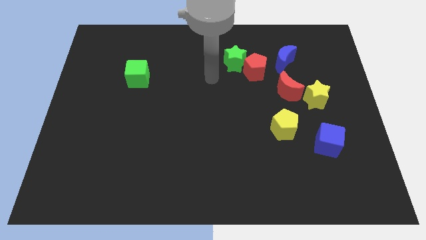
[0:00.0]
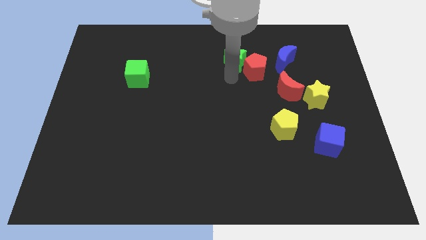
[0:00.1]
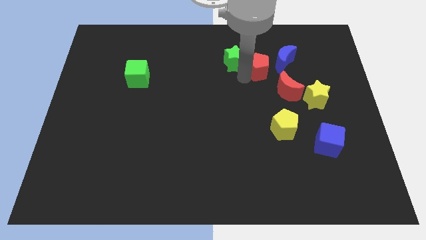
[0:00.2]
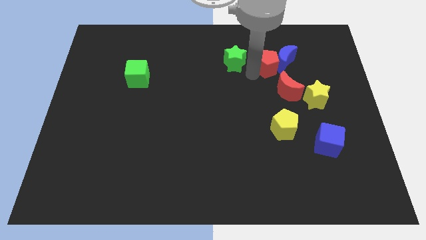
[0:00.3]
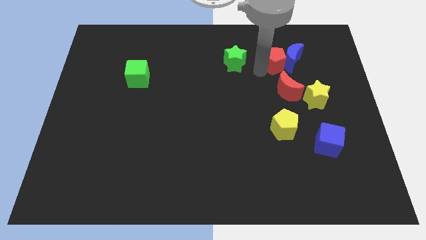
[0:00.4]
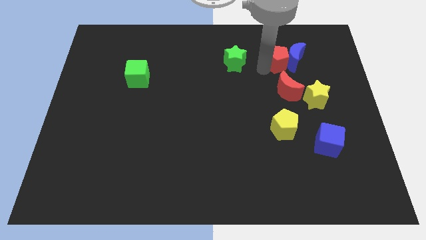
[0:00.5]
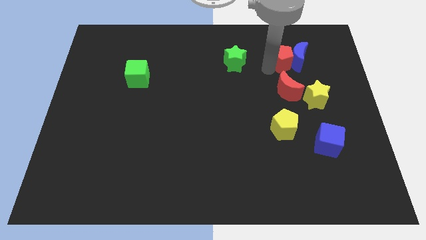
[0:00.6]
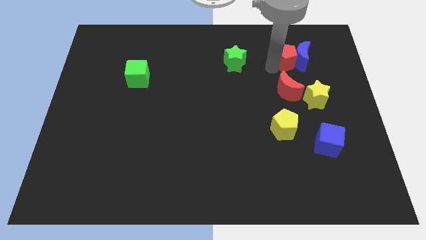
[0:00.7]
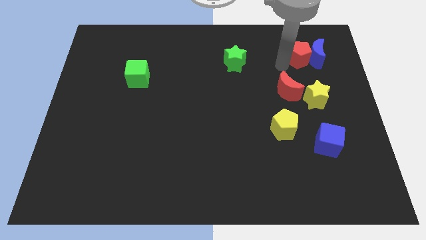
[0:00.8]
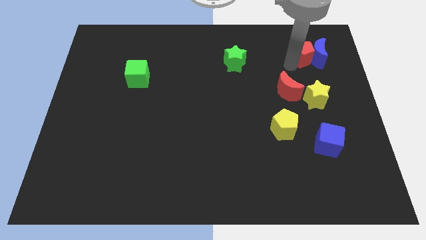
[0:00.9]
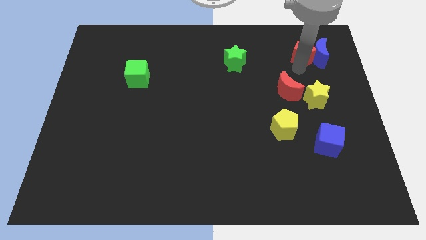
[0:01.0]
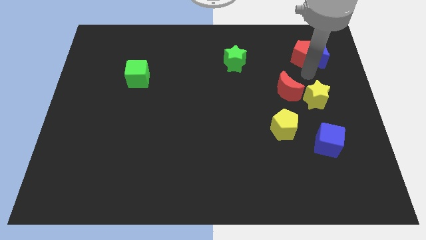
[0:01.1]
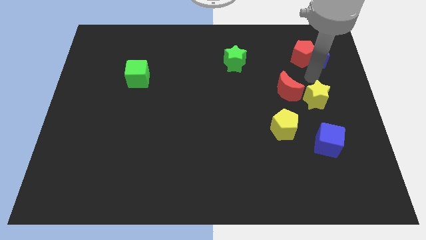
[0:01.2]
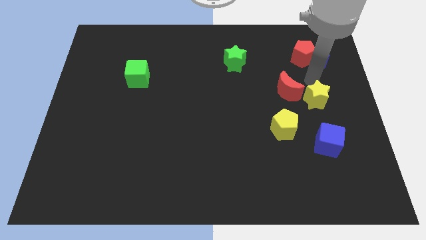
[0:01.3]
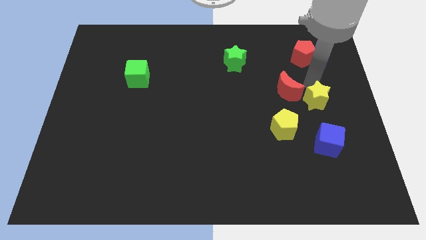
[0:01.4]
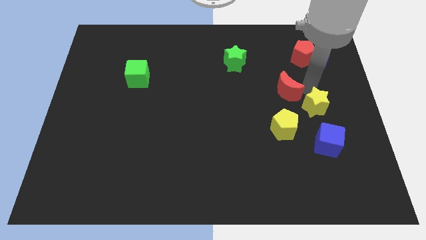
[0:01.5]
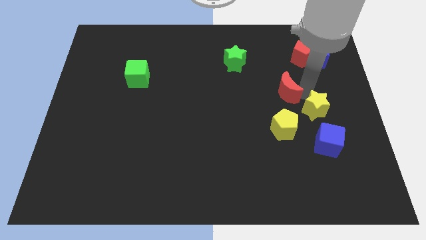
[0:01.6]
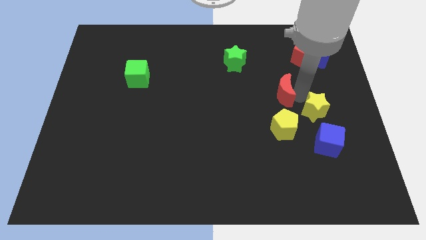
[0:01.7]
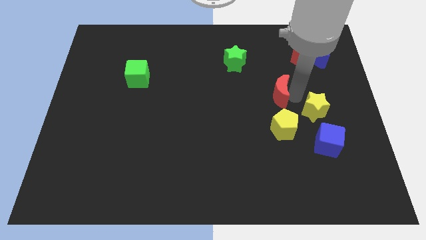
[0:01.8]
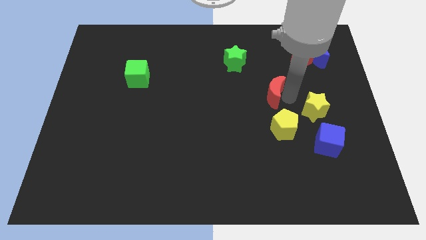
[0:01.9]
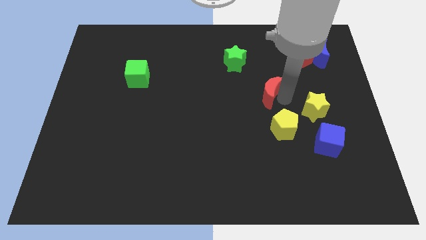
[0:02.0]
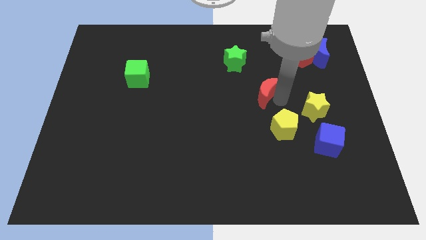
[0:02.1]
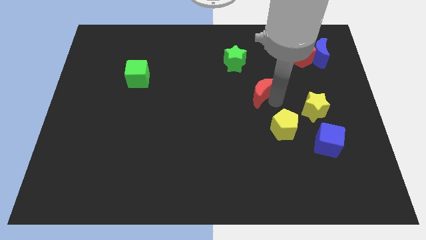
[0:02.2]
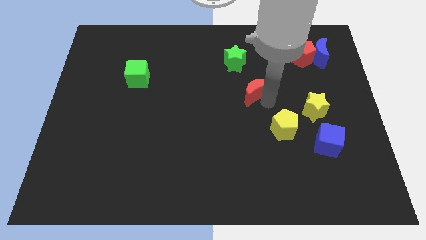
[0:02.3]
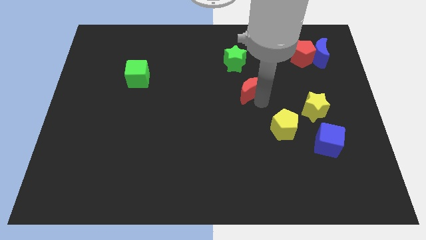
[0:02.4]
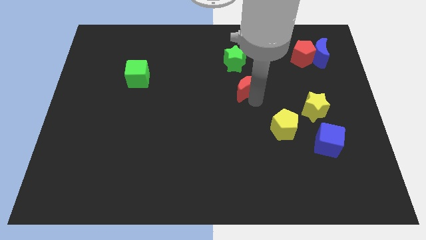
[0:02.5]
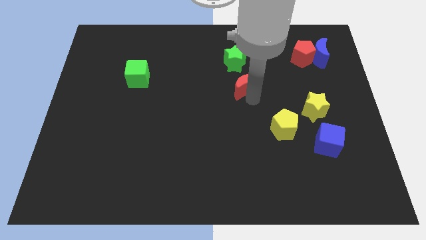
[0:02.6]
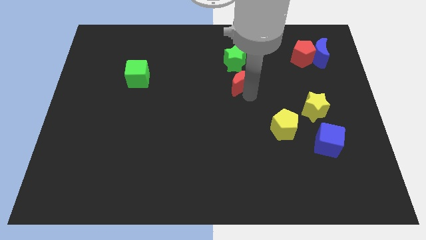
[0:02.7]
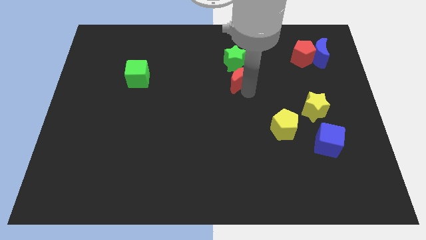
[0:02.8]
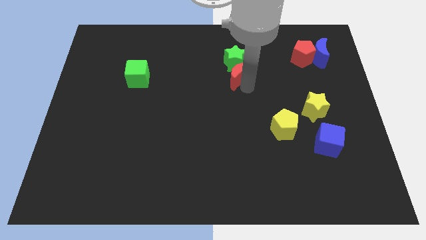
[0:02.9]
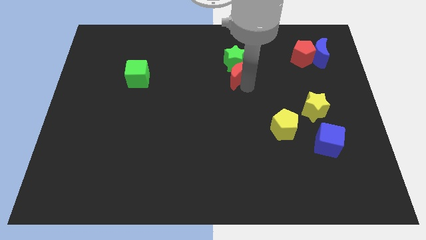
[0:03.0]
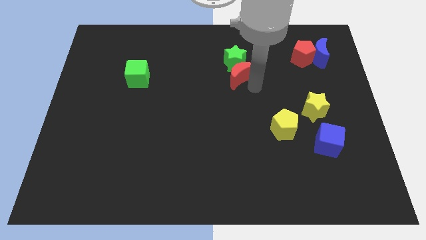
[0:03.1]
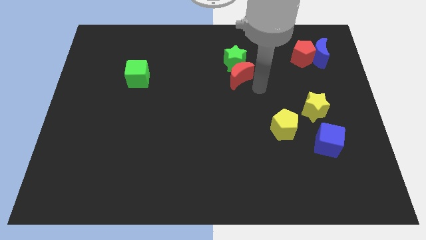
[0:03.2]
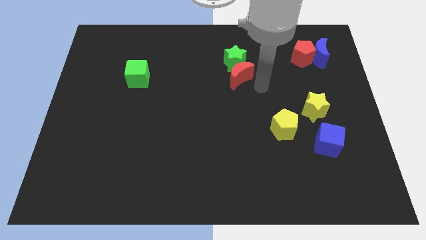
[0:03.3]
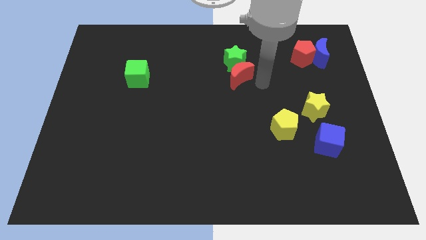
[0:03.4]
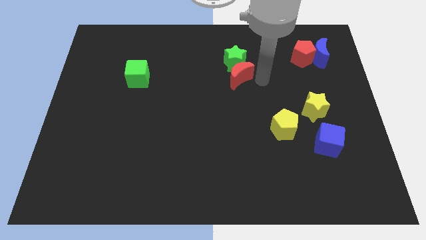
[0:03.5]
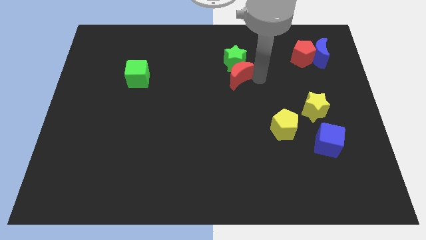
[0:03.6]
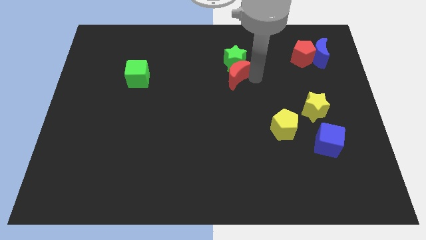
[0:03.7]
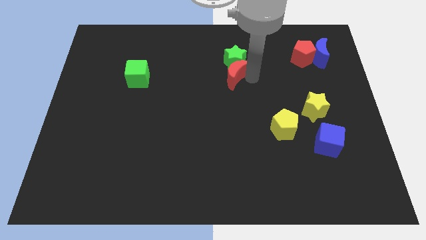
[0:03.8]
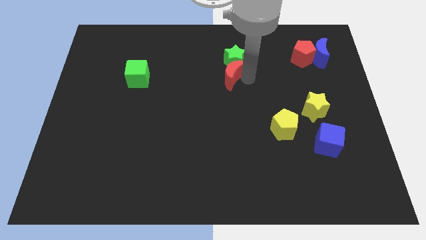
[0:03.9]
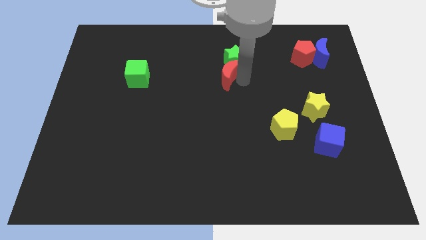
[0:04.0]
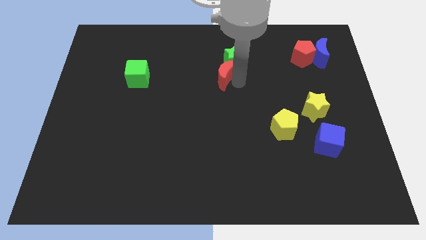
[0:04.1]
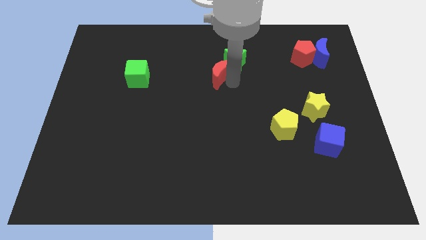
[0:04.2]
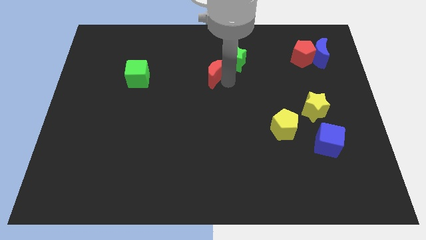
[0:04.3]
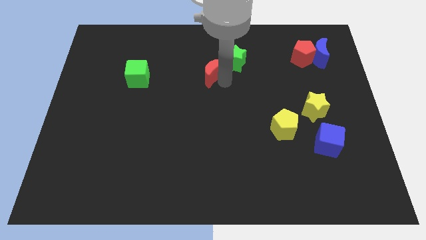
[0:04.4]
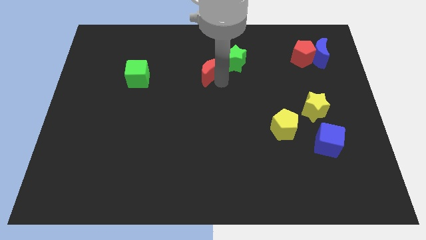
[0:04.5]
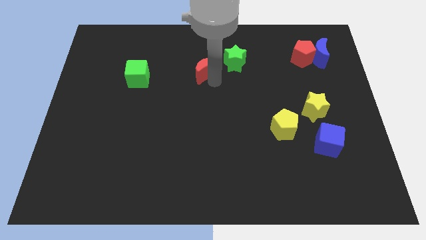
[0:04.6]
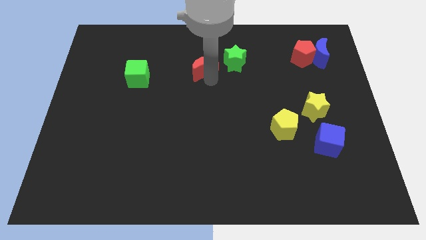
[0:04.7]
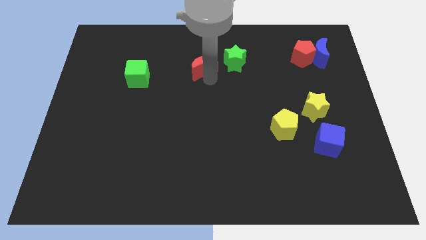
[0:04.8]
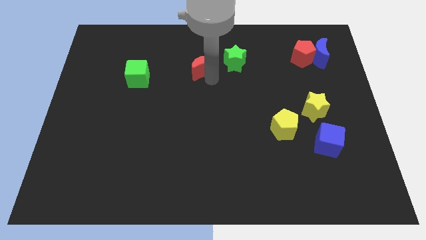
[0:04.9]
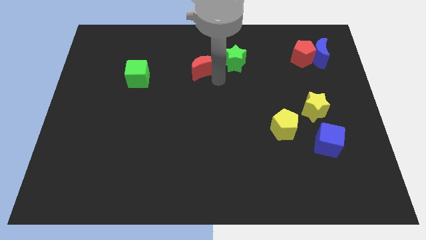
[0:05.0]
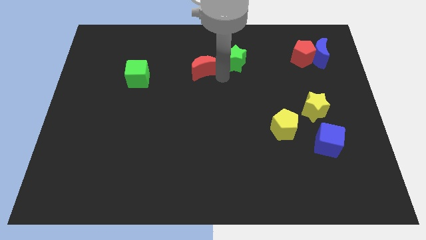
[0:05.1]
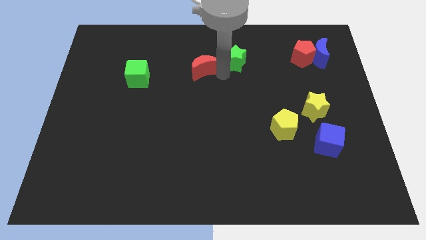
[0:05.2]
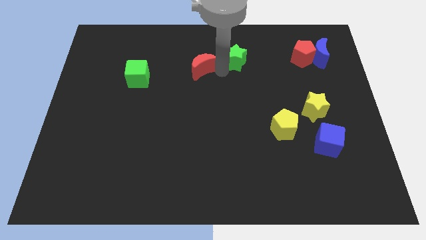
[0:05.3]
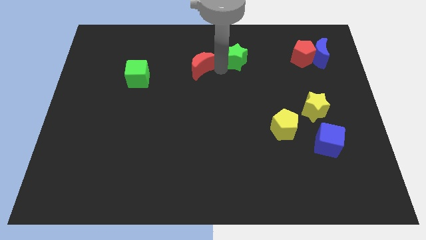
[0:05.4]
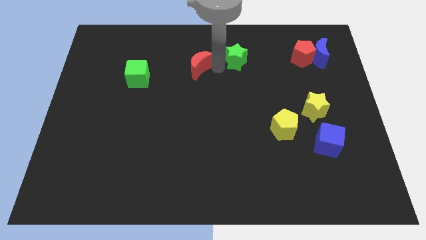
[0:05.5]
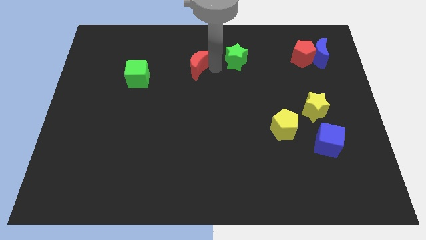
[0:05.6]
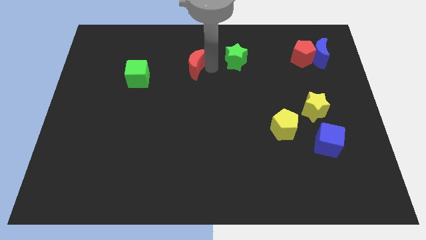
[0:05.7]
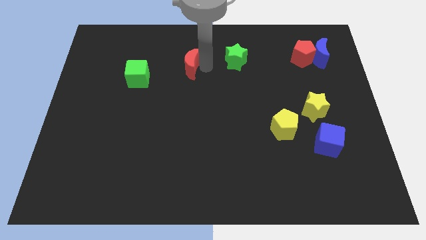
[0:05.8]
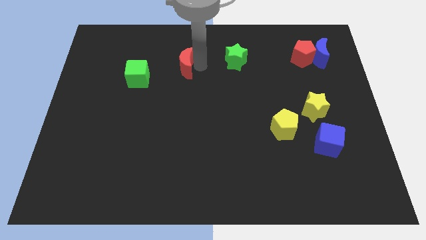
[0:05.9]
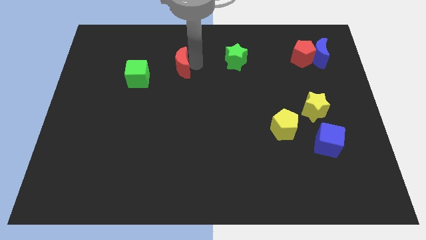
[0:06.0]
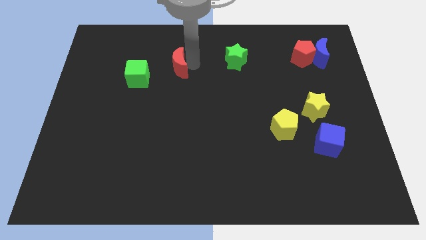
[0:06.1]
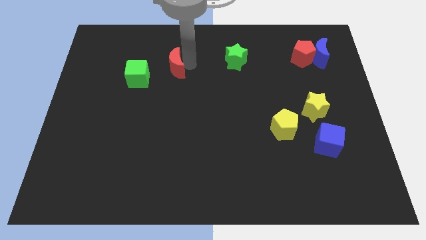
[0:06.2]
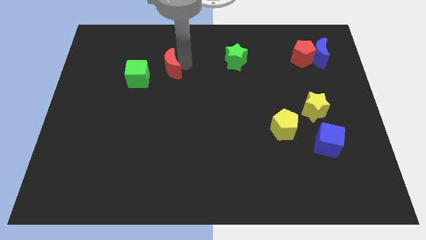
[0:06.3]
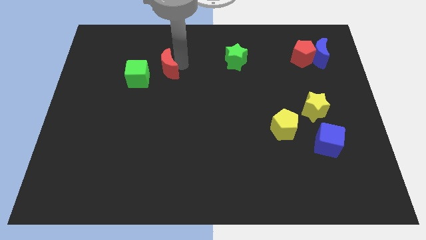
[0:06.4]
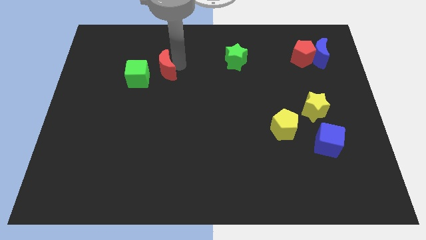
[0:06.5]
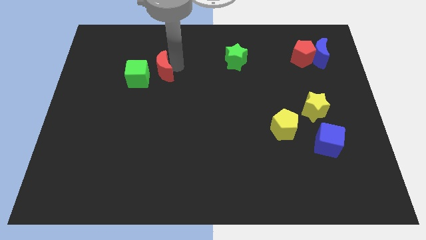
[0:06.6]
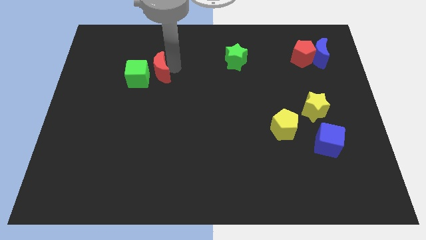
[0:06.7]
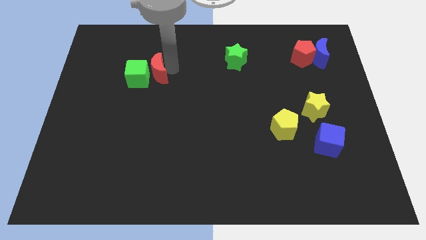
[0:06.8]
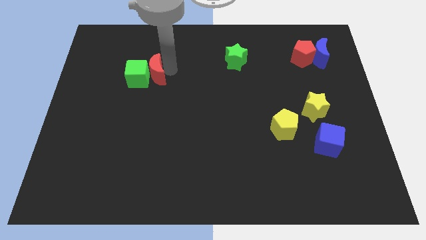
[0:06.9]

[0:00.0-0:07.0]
slide the red moon to the green cube

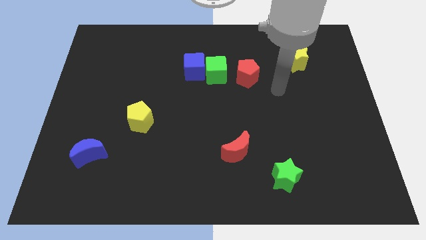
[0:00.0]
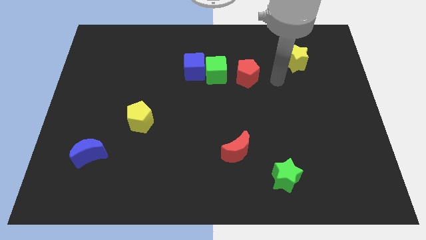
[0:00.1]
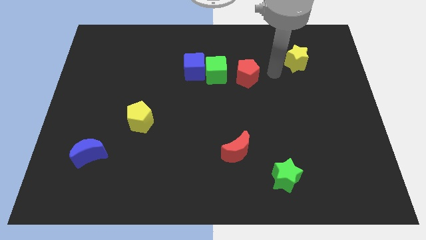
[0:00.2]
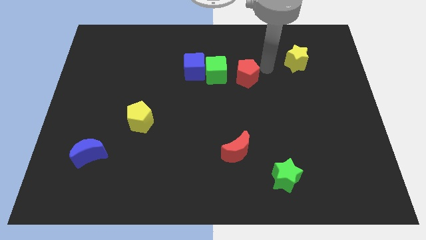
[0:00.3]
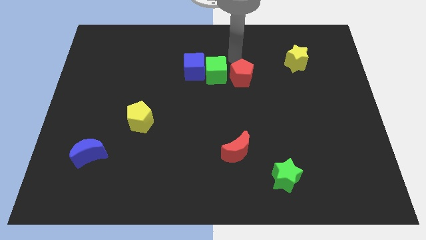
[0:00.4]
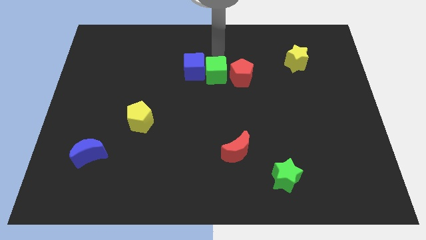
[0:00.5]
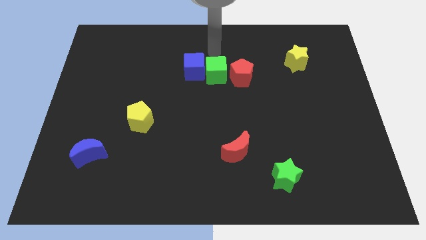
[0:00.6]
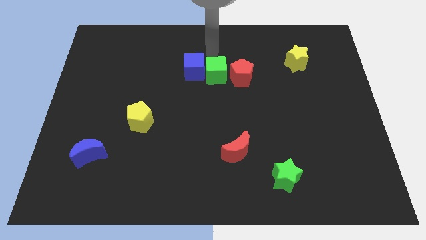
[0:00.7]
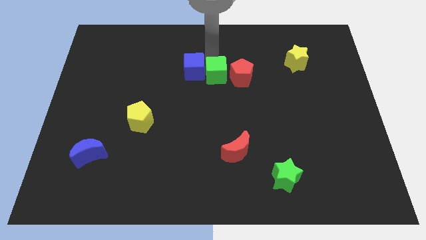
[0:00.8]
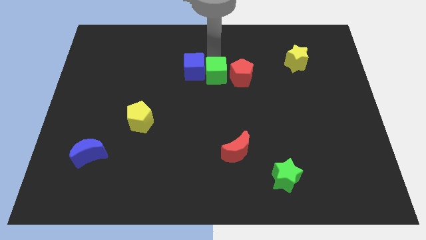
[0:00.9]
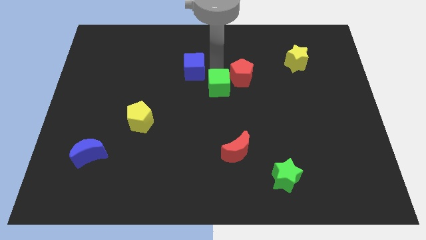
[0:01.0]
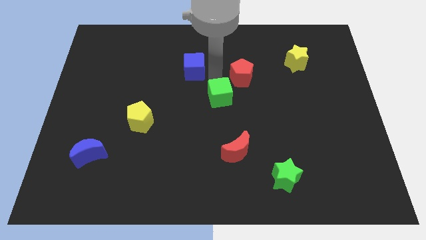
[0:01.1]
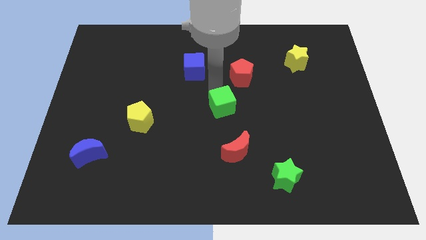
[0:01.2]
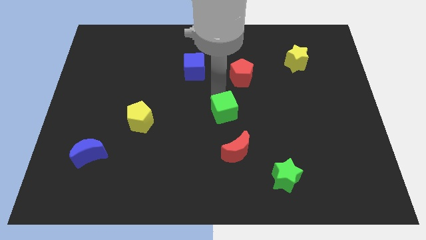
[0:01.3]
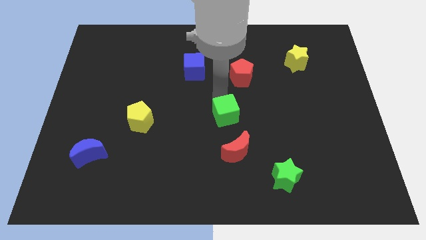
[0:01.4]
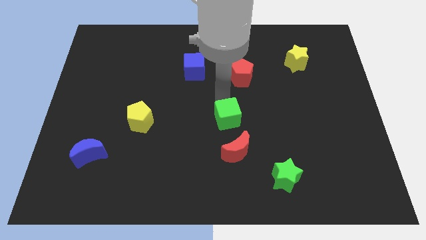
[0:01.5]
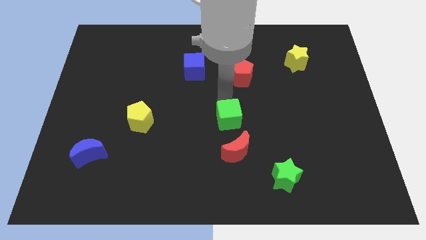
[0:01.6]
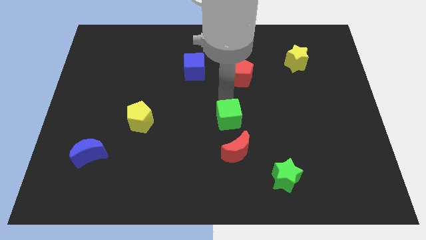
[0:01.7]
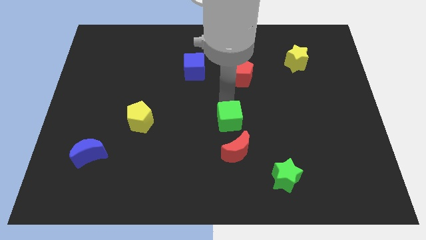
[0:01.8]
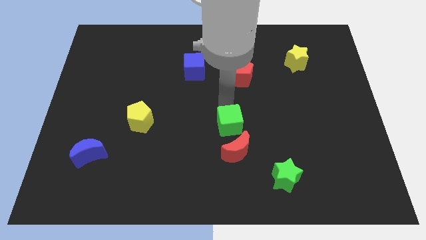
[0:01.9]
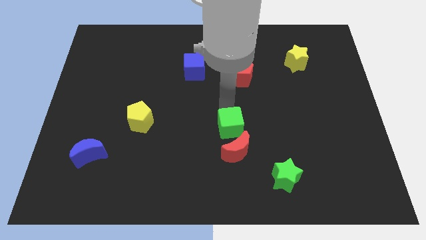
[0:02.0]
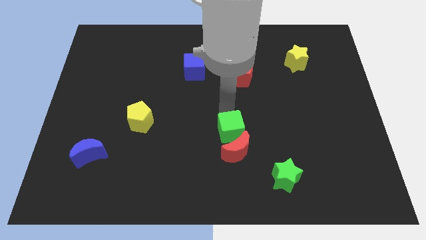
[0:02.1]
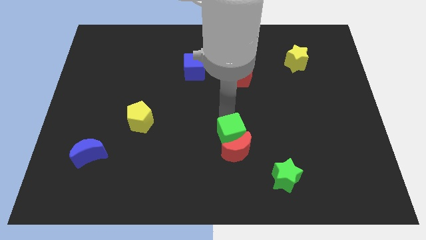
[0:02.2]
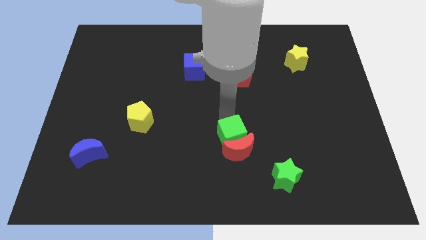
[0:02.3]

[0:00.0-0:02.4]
move the green cube towards the red moon
